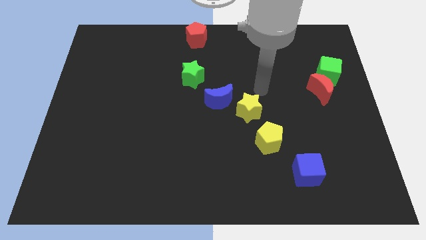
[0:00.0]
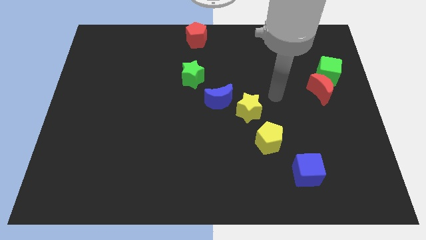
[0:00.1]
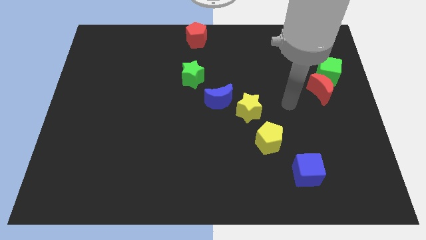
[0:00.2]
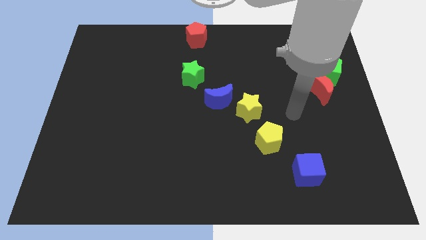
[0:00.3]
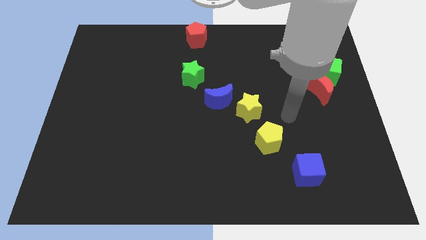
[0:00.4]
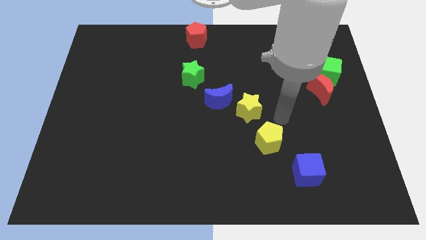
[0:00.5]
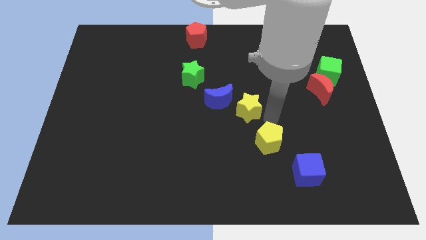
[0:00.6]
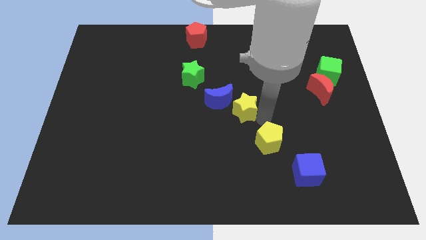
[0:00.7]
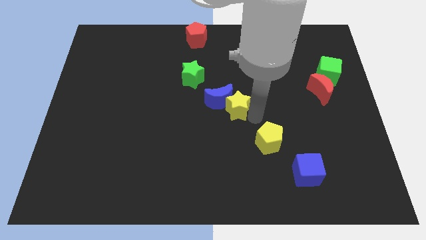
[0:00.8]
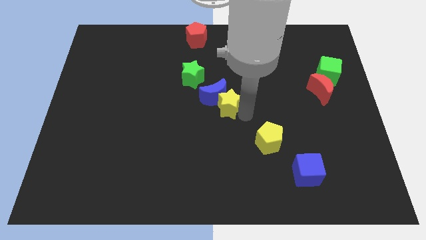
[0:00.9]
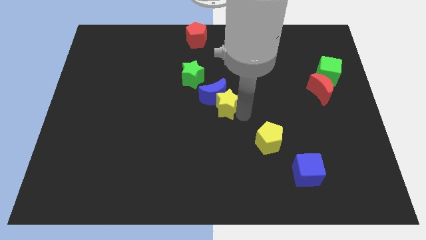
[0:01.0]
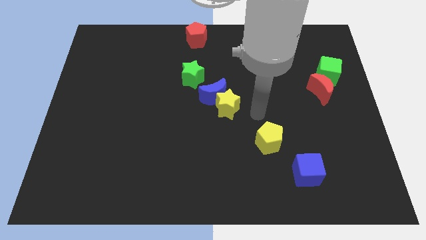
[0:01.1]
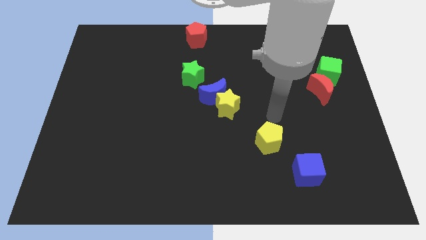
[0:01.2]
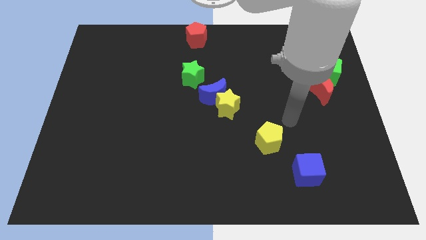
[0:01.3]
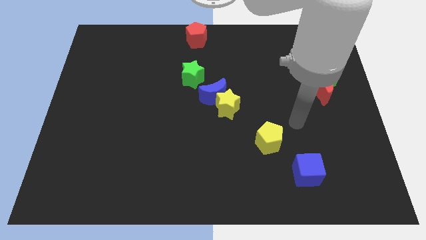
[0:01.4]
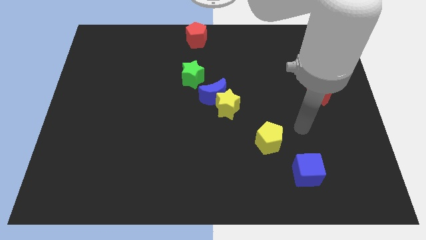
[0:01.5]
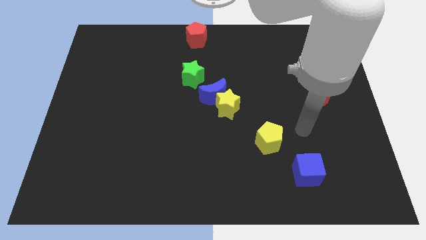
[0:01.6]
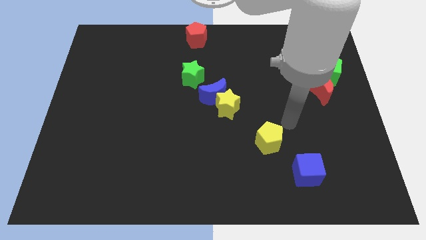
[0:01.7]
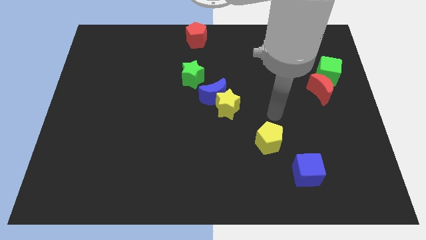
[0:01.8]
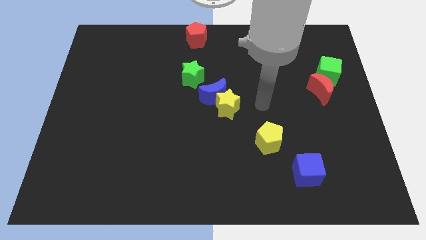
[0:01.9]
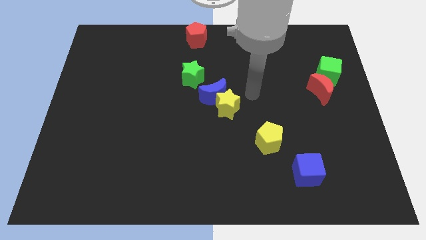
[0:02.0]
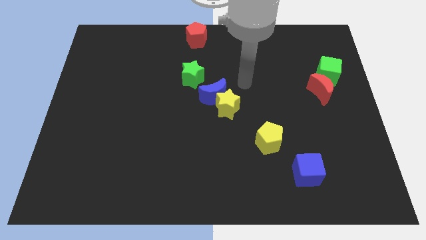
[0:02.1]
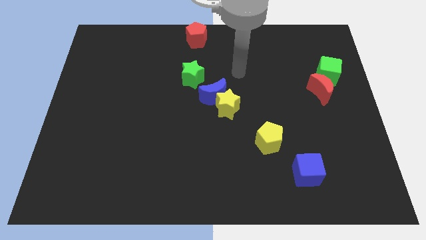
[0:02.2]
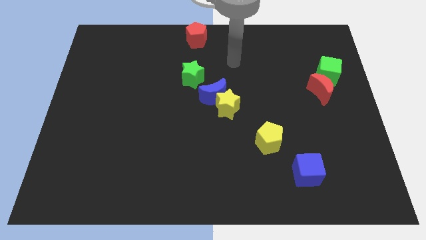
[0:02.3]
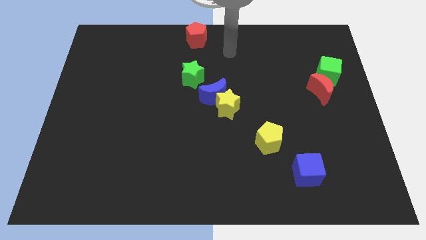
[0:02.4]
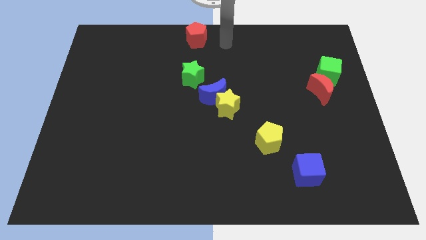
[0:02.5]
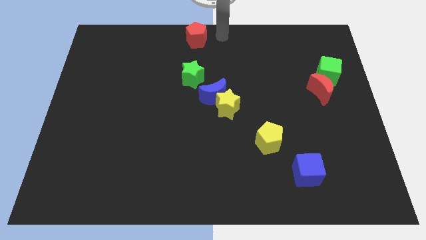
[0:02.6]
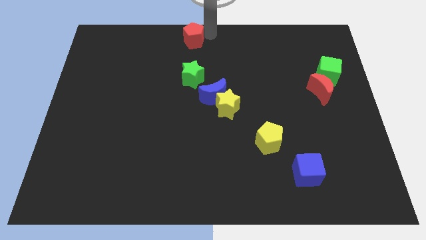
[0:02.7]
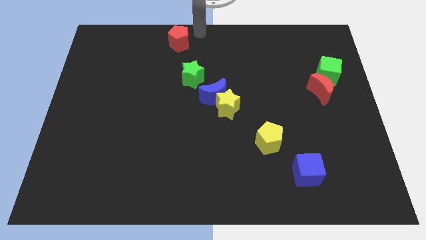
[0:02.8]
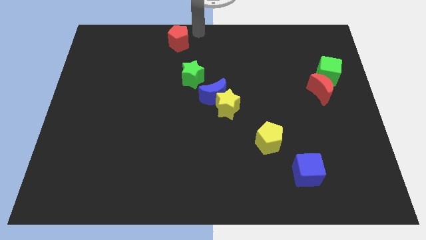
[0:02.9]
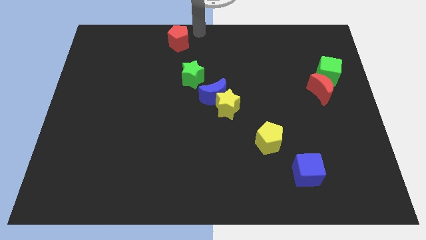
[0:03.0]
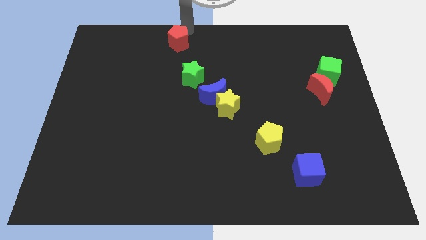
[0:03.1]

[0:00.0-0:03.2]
move the yellow star diagonally to the bottom right of the blue crescent

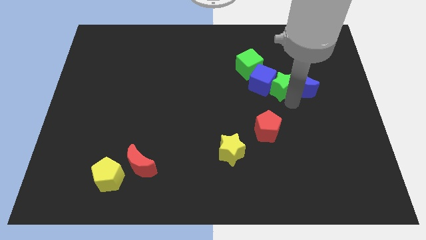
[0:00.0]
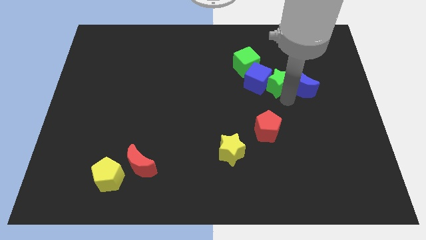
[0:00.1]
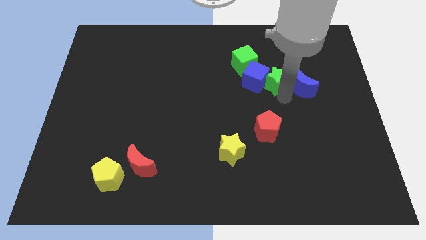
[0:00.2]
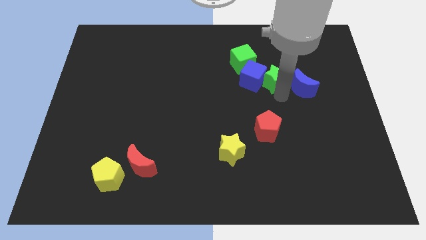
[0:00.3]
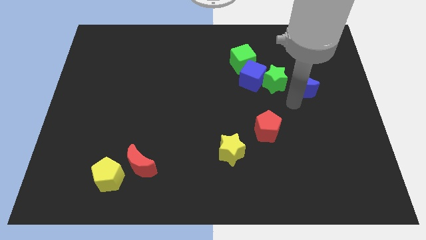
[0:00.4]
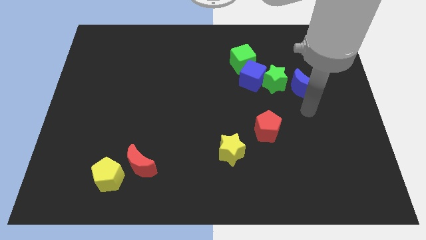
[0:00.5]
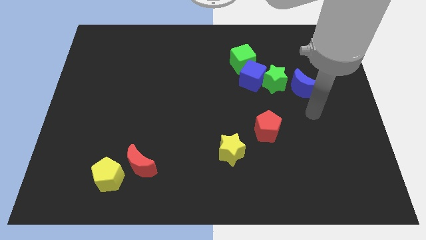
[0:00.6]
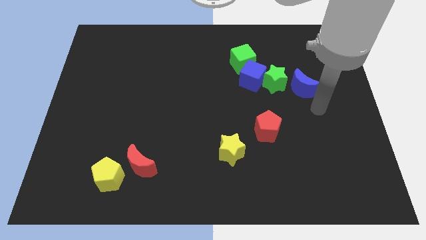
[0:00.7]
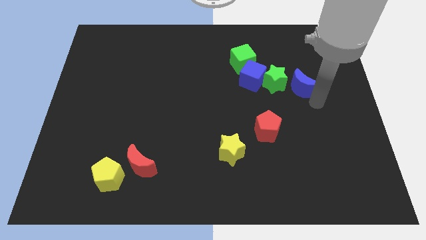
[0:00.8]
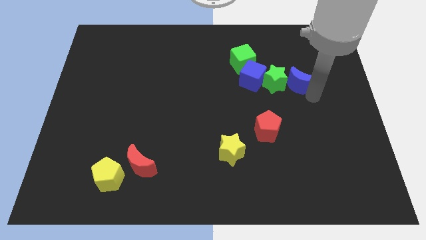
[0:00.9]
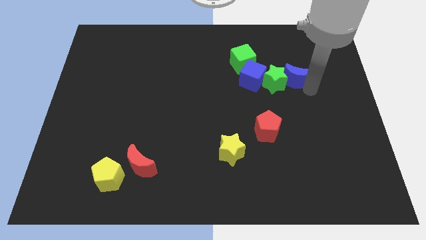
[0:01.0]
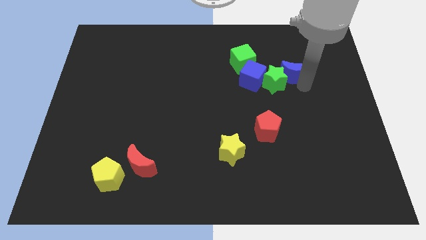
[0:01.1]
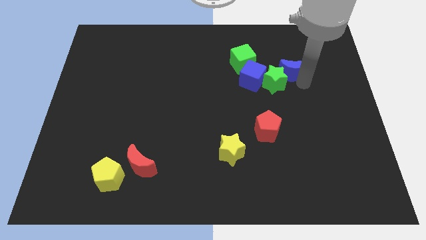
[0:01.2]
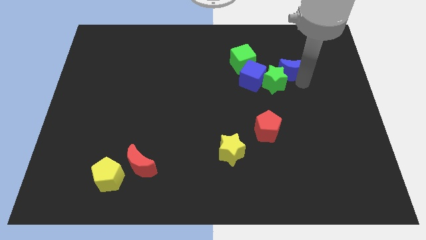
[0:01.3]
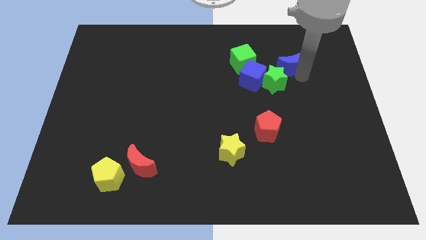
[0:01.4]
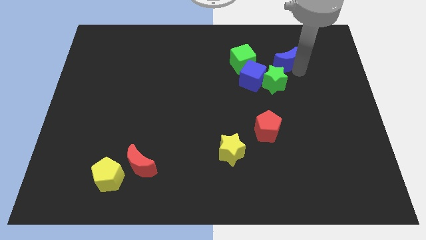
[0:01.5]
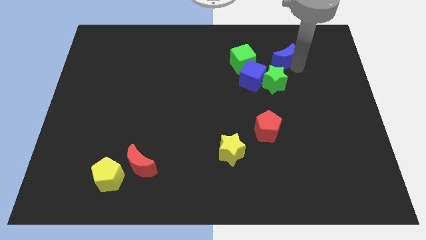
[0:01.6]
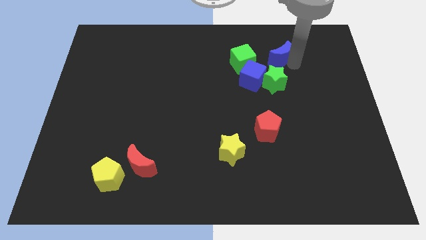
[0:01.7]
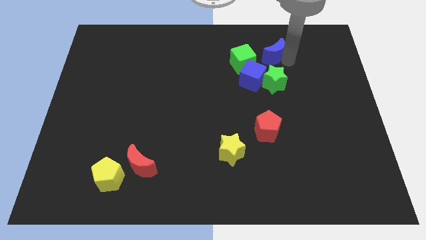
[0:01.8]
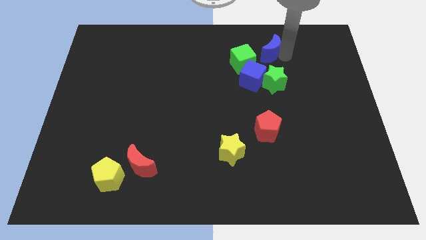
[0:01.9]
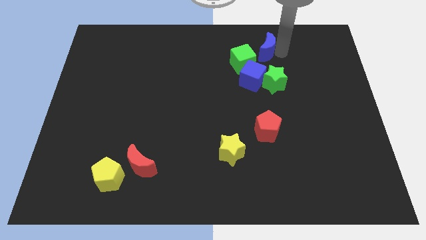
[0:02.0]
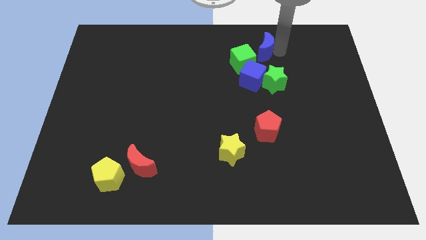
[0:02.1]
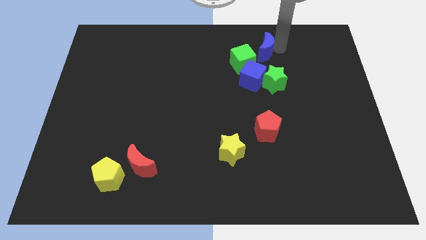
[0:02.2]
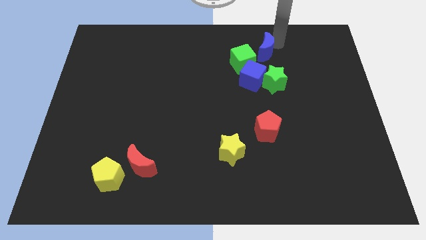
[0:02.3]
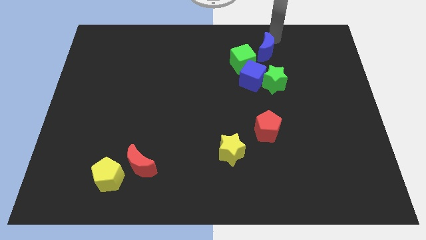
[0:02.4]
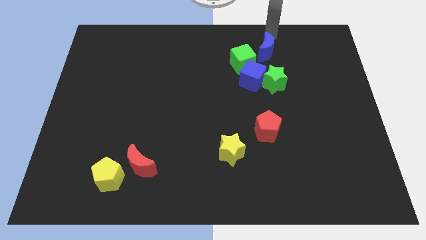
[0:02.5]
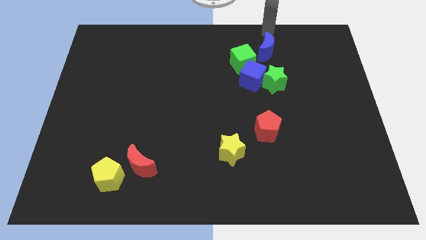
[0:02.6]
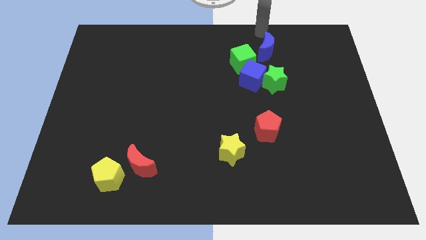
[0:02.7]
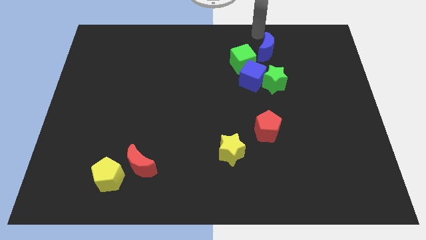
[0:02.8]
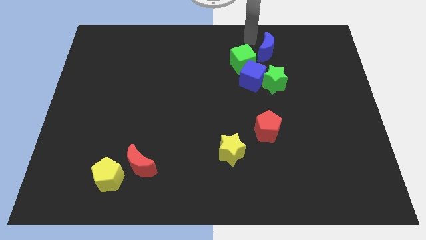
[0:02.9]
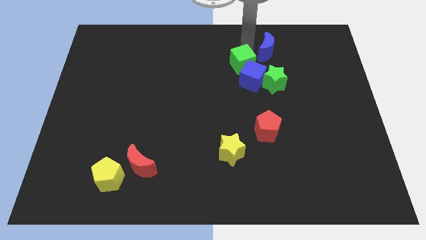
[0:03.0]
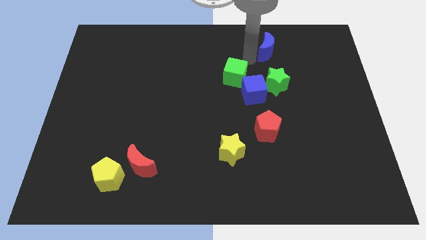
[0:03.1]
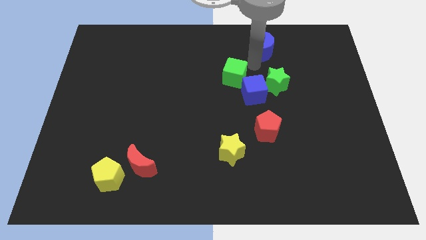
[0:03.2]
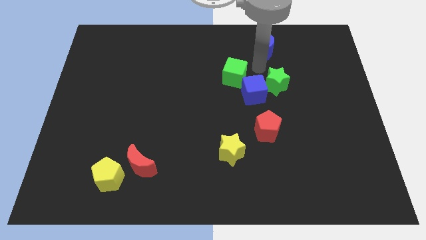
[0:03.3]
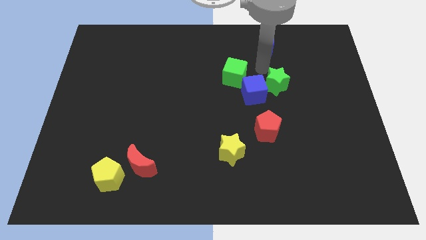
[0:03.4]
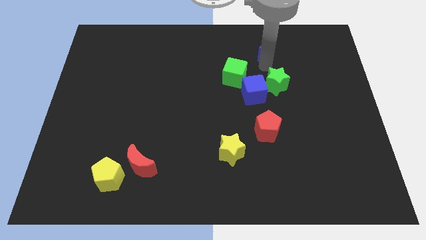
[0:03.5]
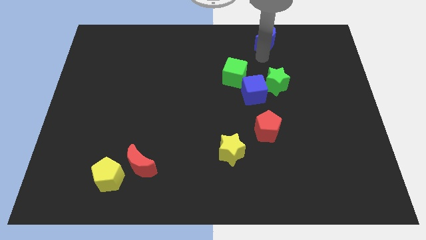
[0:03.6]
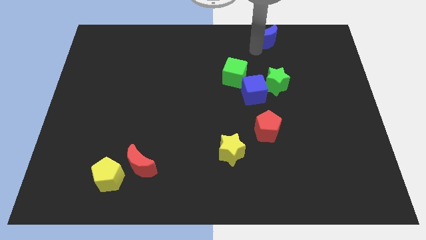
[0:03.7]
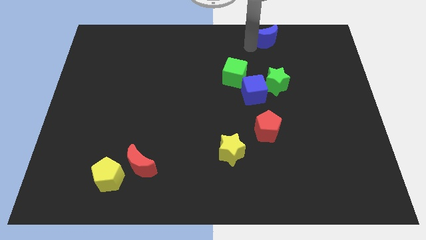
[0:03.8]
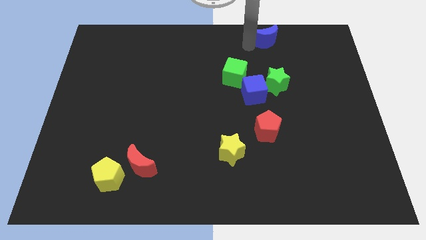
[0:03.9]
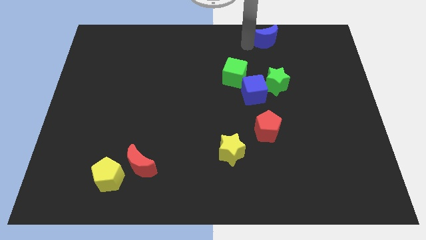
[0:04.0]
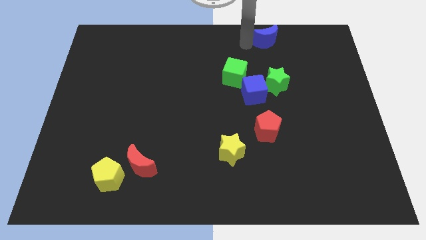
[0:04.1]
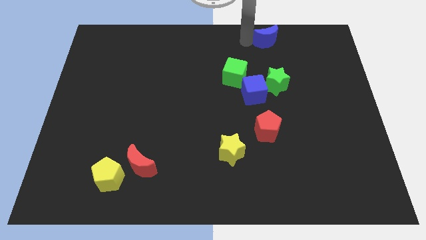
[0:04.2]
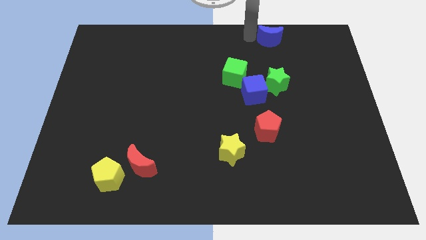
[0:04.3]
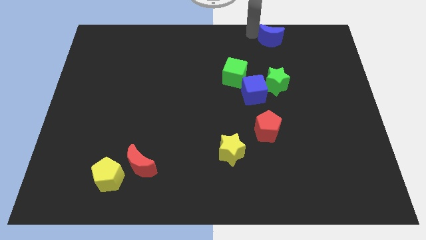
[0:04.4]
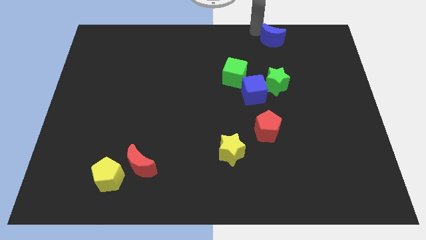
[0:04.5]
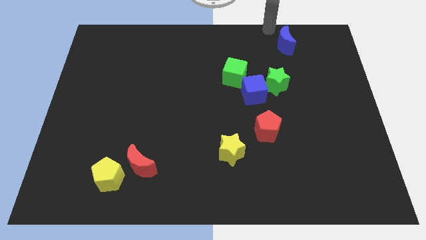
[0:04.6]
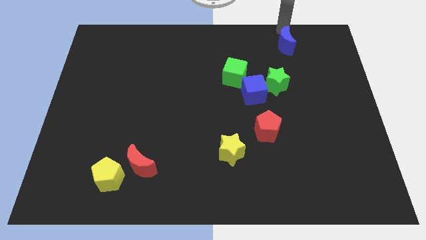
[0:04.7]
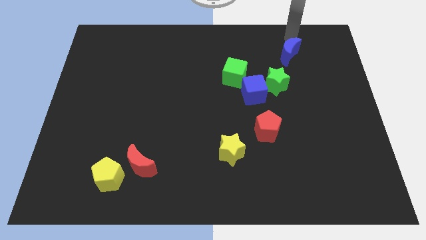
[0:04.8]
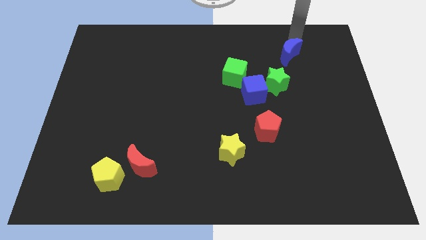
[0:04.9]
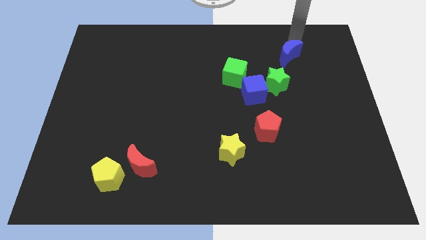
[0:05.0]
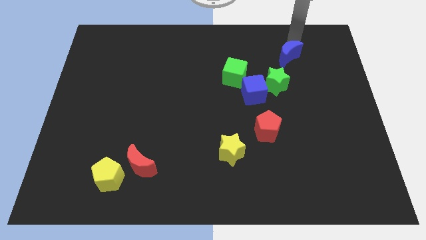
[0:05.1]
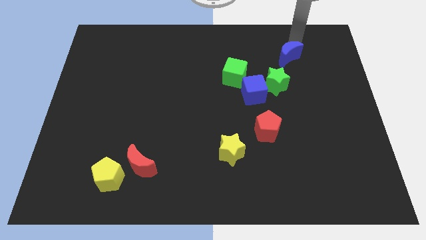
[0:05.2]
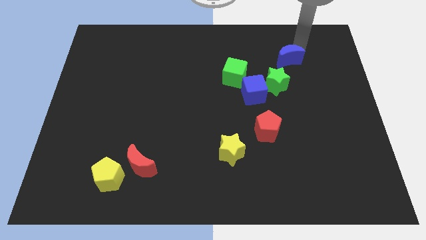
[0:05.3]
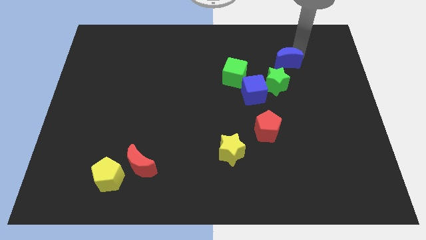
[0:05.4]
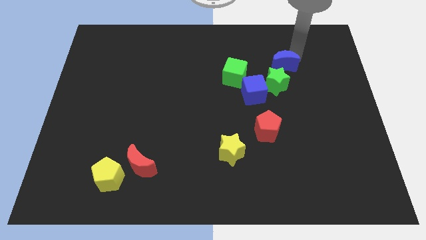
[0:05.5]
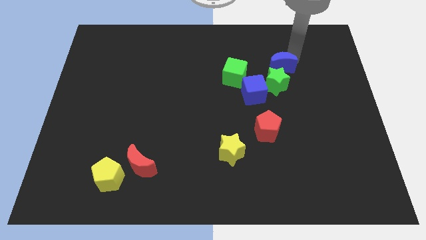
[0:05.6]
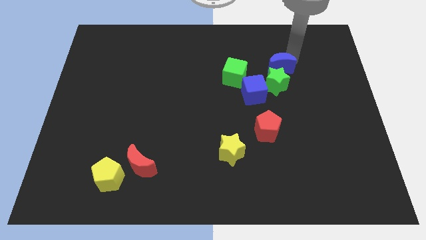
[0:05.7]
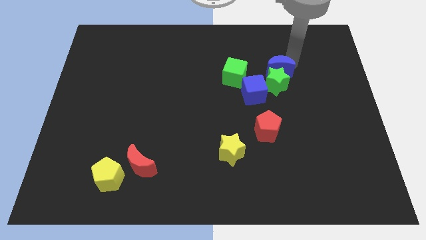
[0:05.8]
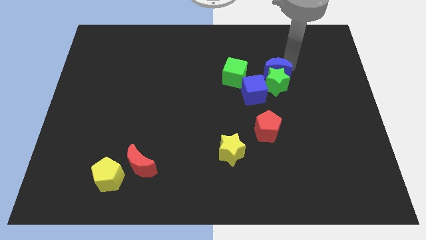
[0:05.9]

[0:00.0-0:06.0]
put the blue moon at the top of the green star
